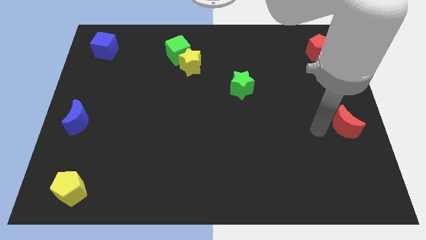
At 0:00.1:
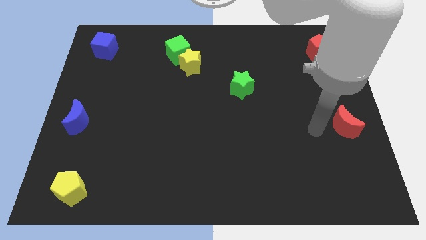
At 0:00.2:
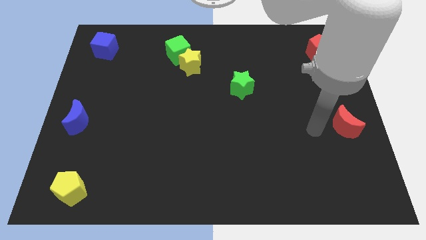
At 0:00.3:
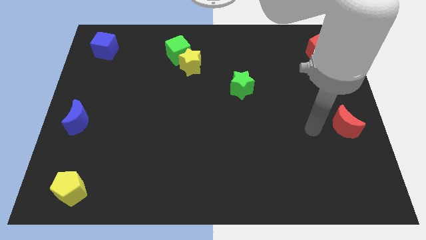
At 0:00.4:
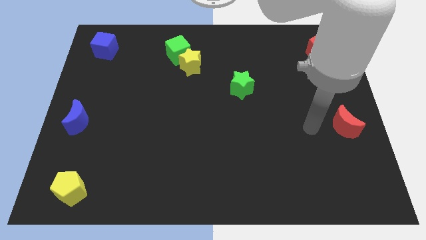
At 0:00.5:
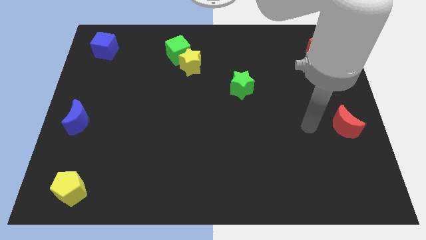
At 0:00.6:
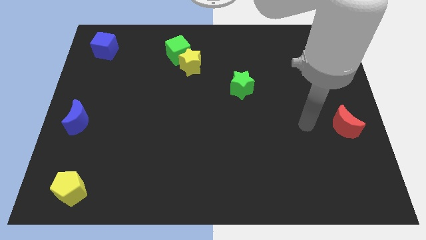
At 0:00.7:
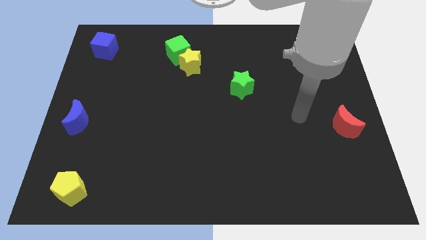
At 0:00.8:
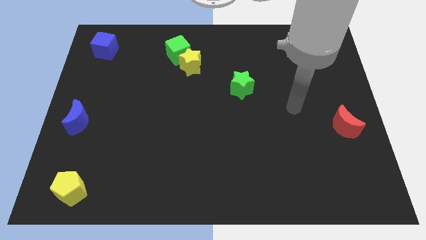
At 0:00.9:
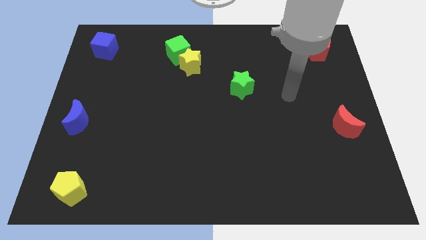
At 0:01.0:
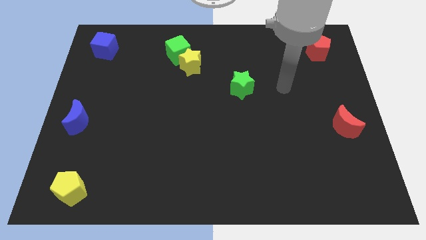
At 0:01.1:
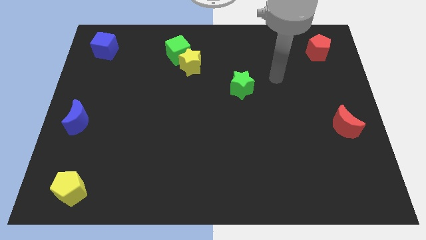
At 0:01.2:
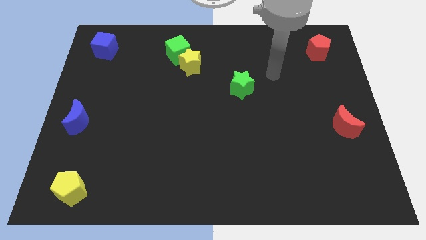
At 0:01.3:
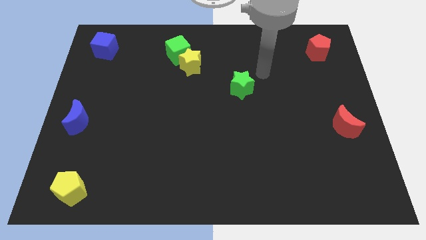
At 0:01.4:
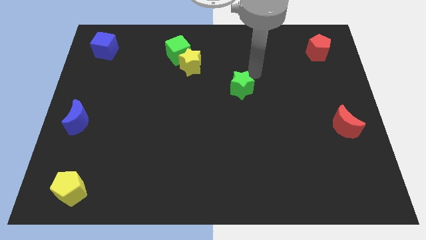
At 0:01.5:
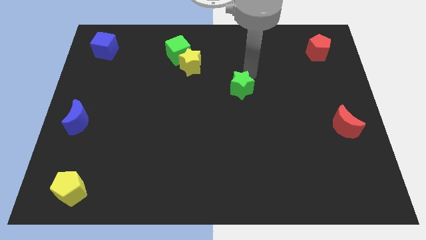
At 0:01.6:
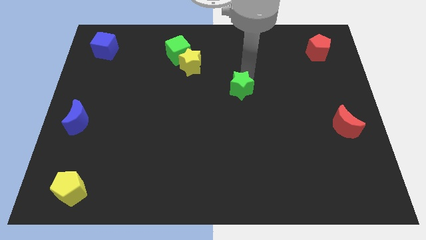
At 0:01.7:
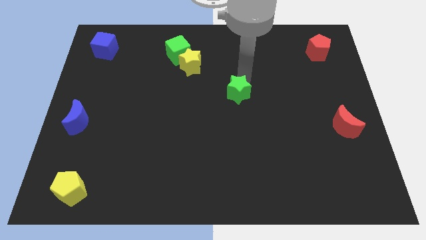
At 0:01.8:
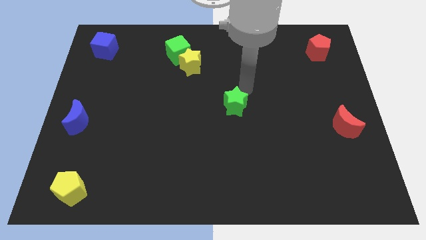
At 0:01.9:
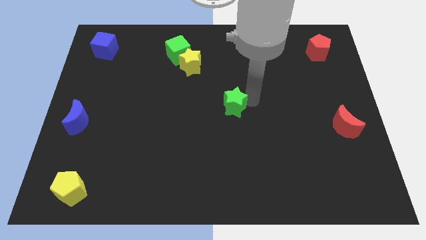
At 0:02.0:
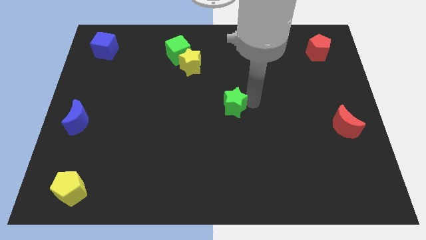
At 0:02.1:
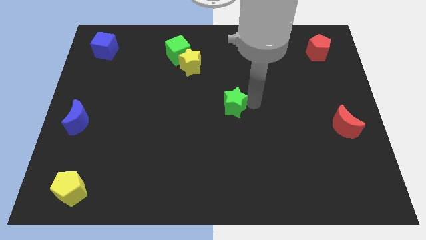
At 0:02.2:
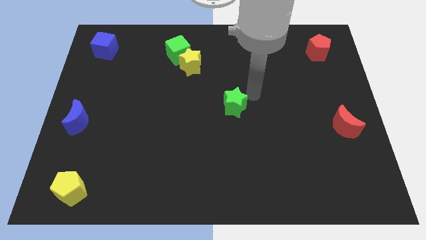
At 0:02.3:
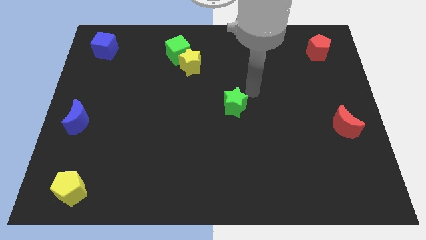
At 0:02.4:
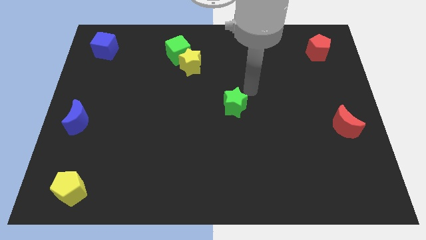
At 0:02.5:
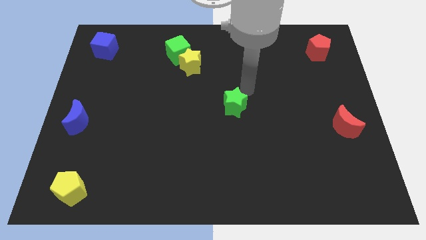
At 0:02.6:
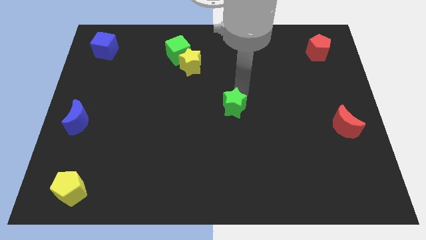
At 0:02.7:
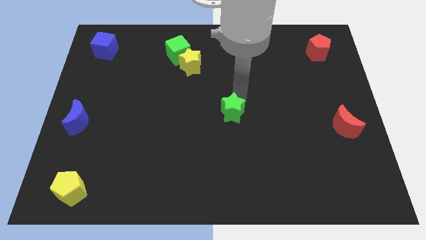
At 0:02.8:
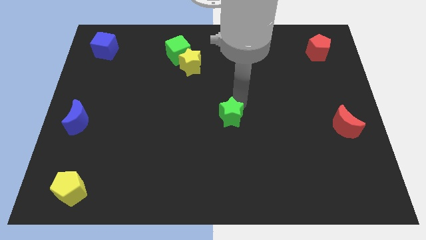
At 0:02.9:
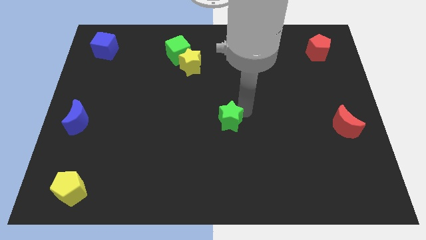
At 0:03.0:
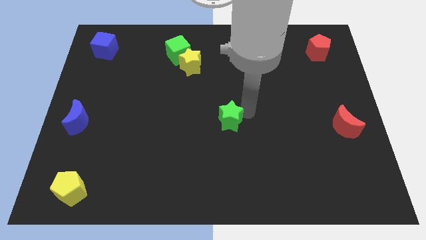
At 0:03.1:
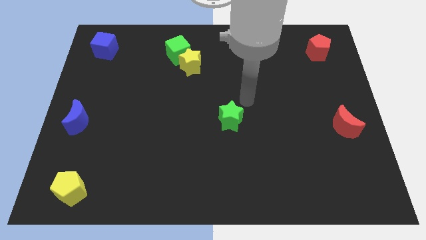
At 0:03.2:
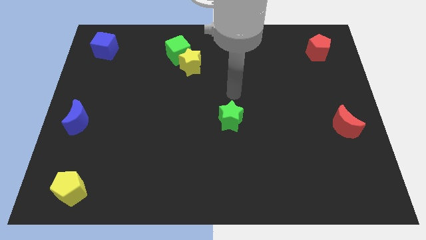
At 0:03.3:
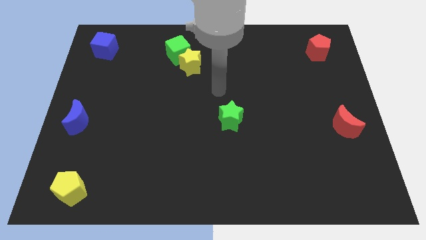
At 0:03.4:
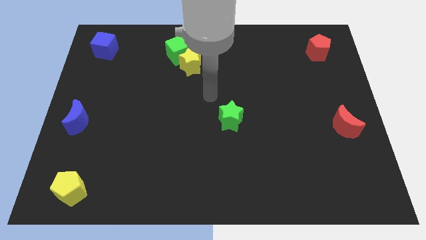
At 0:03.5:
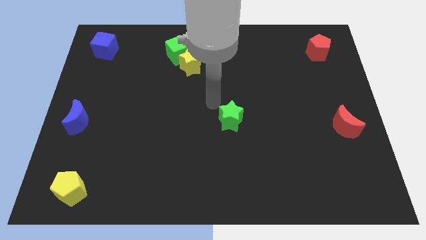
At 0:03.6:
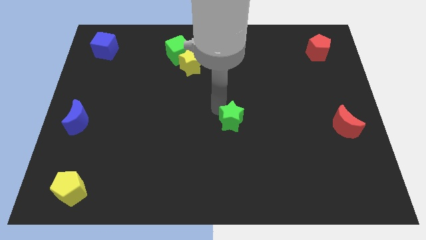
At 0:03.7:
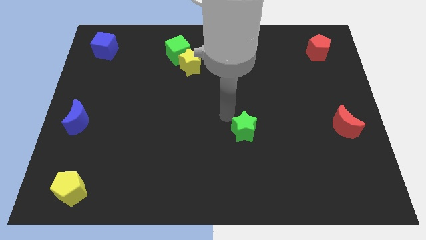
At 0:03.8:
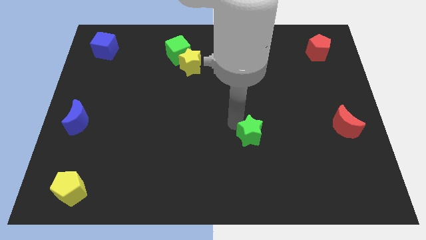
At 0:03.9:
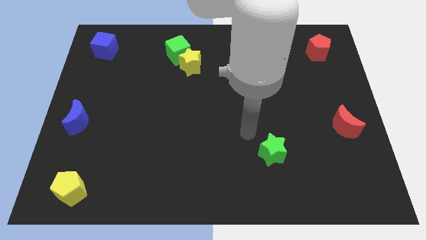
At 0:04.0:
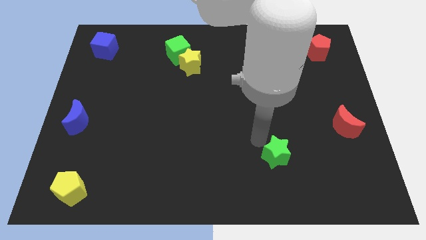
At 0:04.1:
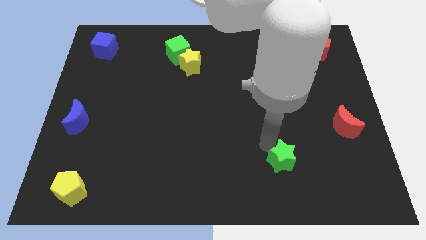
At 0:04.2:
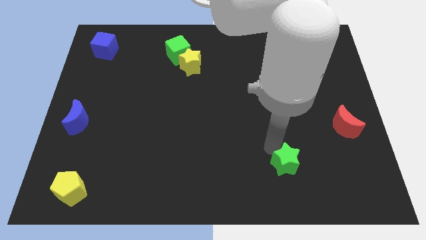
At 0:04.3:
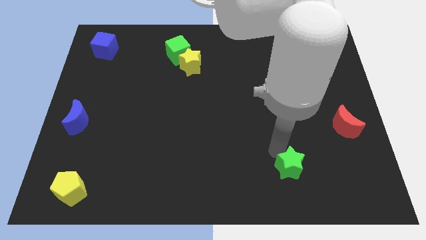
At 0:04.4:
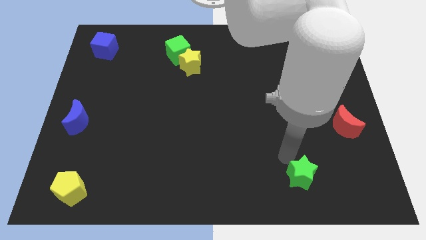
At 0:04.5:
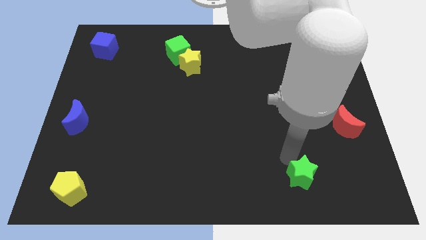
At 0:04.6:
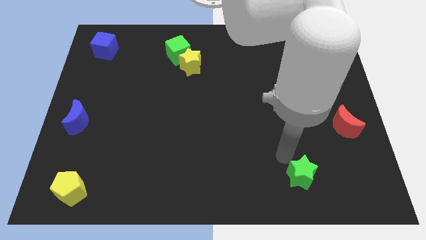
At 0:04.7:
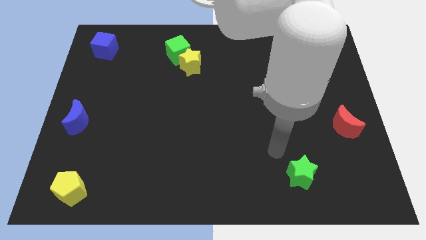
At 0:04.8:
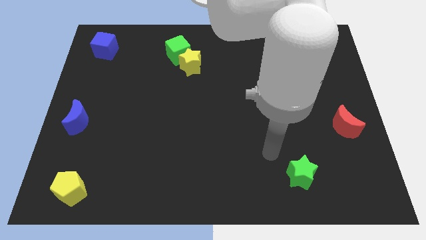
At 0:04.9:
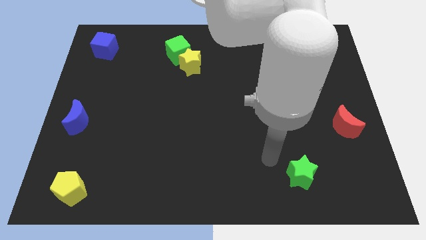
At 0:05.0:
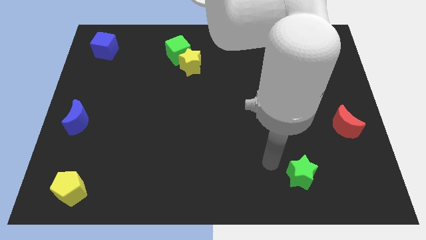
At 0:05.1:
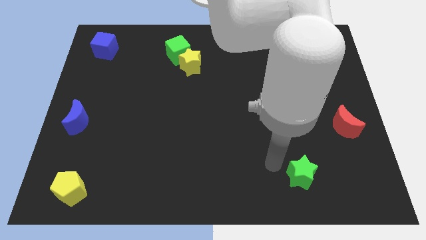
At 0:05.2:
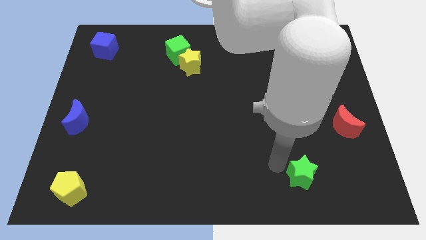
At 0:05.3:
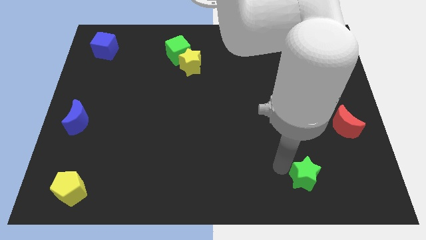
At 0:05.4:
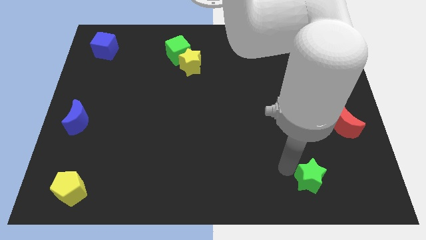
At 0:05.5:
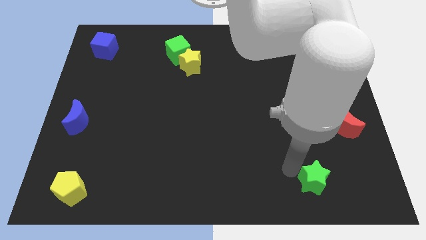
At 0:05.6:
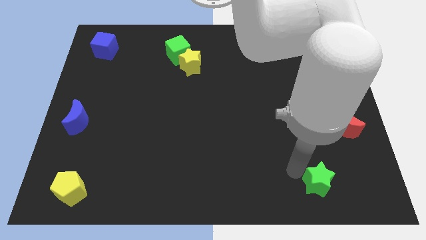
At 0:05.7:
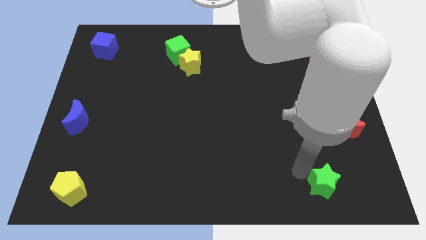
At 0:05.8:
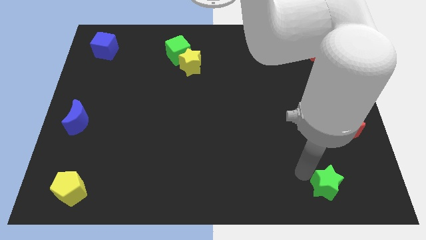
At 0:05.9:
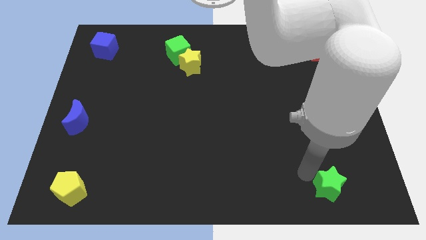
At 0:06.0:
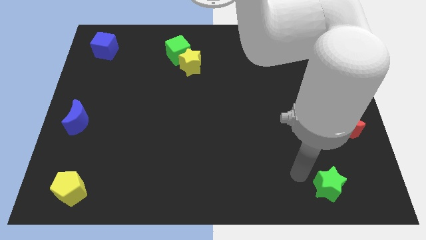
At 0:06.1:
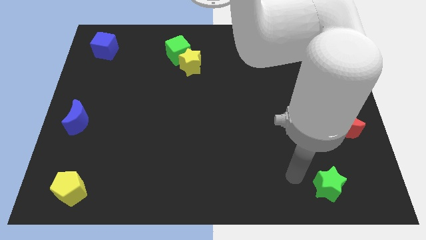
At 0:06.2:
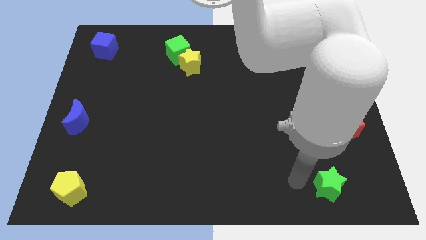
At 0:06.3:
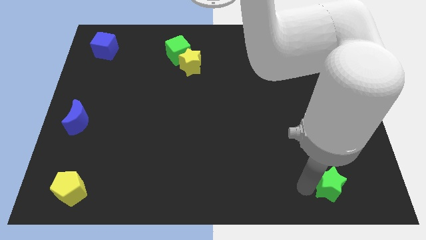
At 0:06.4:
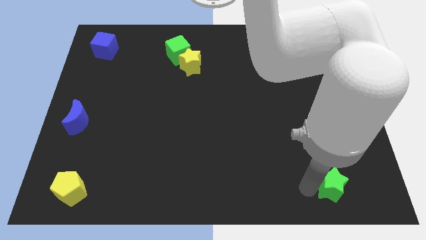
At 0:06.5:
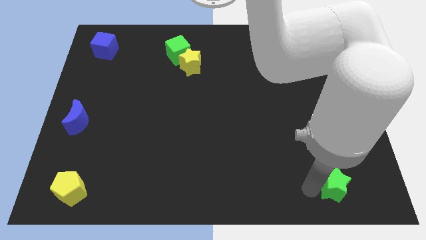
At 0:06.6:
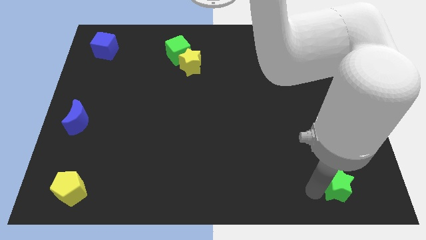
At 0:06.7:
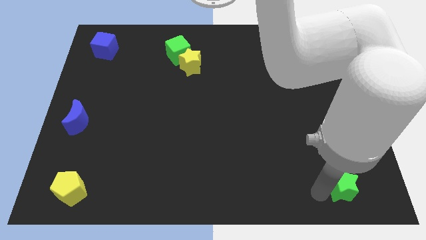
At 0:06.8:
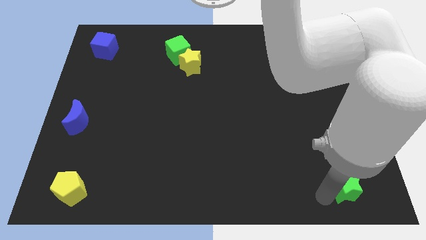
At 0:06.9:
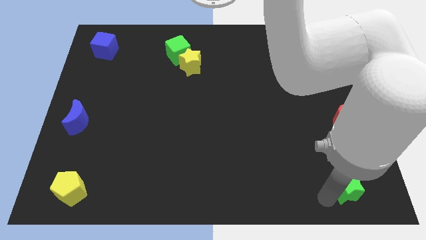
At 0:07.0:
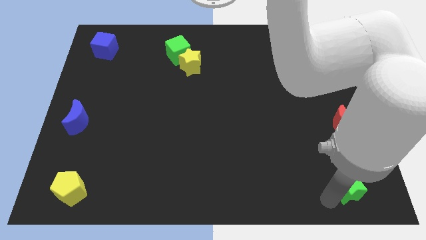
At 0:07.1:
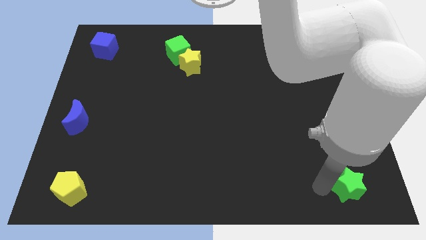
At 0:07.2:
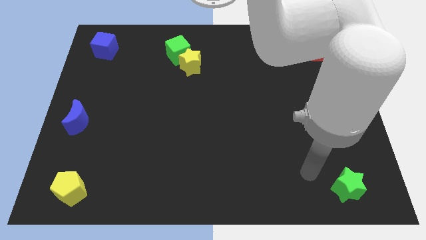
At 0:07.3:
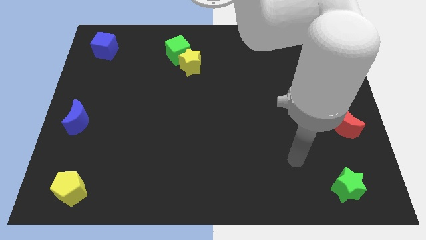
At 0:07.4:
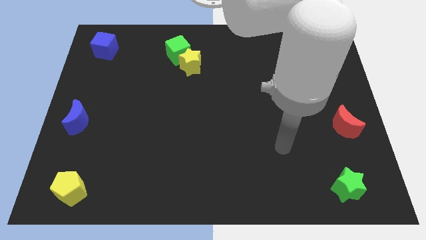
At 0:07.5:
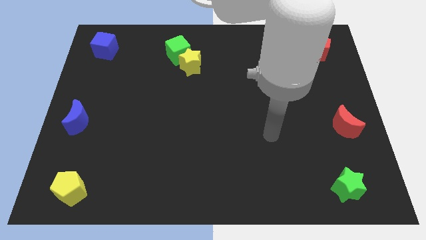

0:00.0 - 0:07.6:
push the green star to the bottom of the red crescent

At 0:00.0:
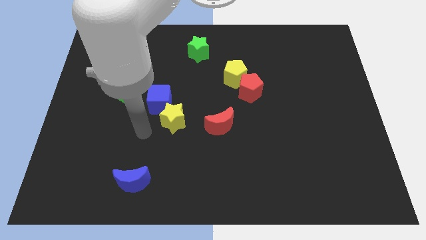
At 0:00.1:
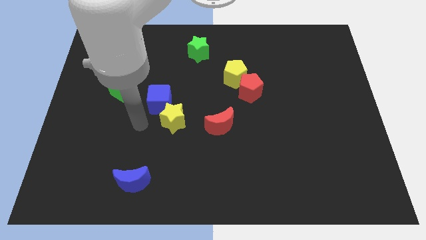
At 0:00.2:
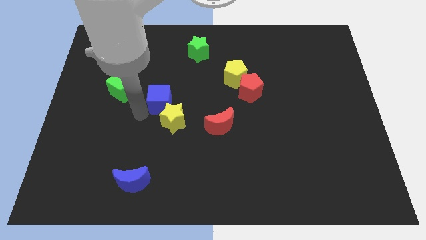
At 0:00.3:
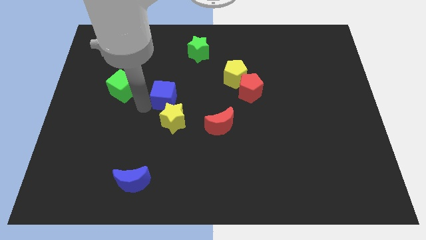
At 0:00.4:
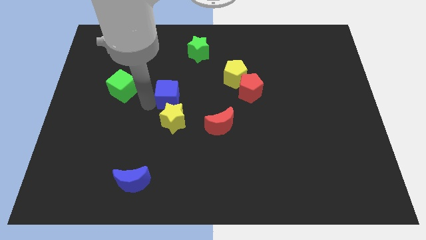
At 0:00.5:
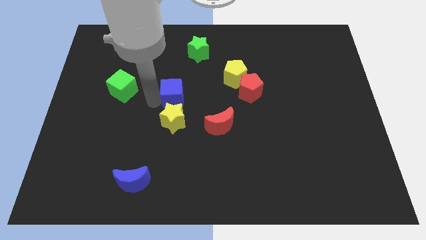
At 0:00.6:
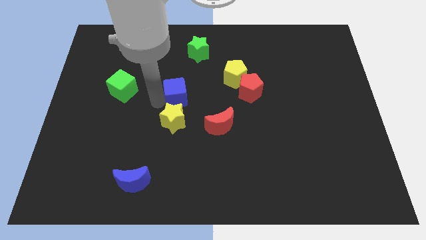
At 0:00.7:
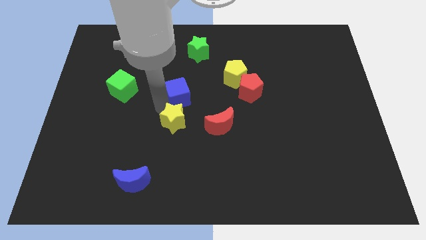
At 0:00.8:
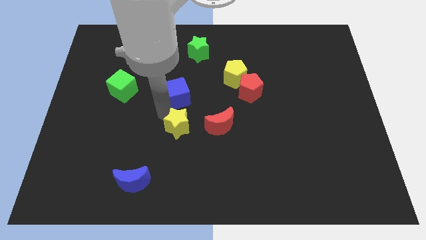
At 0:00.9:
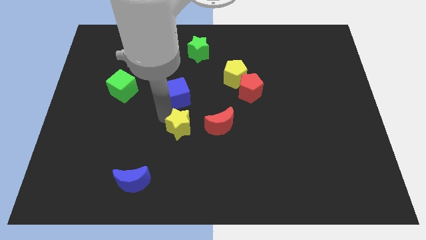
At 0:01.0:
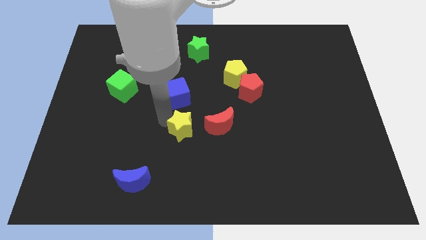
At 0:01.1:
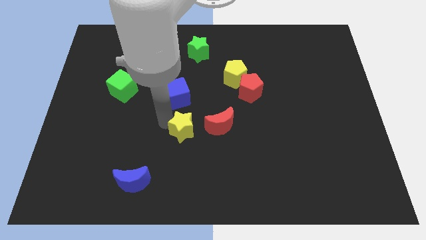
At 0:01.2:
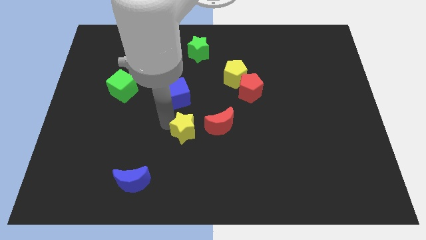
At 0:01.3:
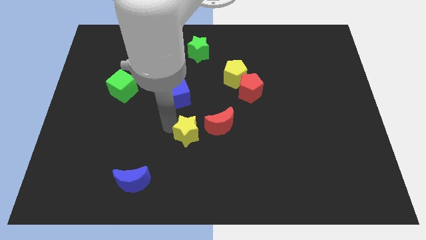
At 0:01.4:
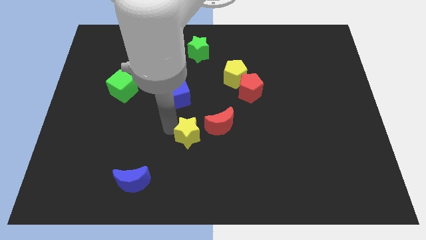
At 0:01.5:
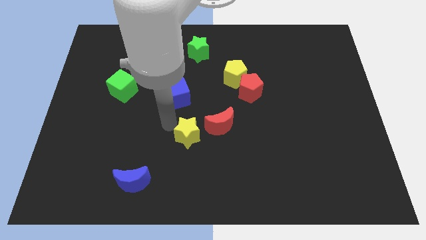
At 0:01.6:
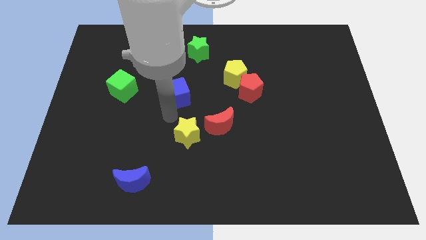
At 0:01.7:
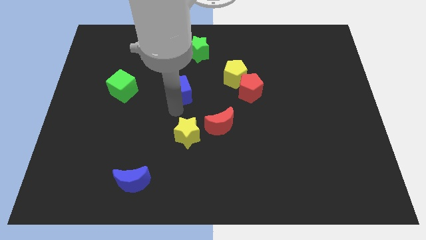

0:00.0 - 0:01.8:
push the blue cube and yellow star in different directions
